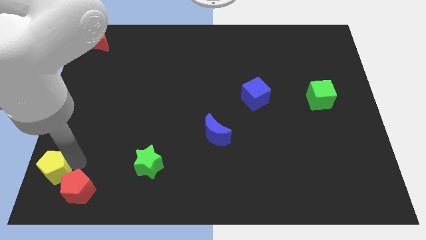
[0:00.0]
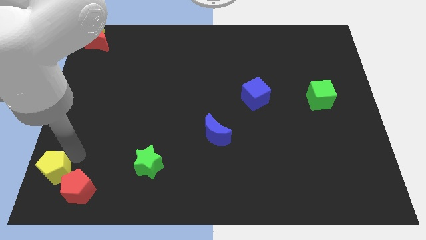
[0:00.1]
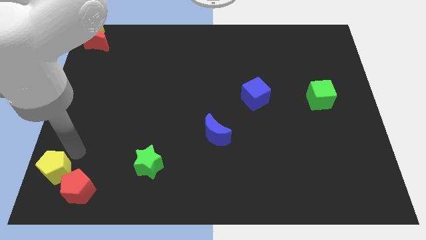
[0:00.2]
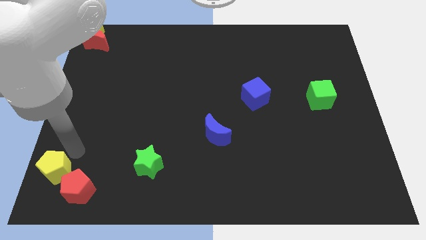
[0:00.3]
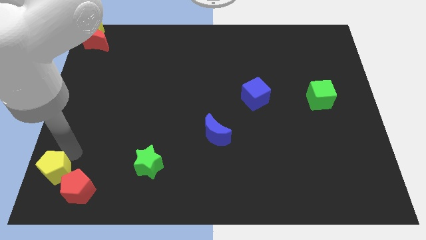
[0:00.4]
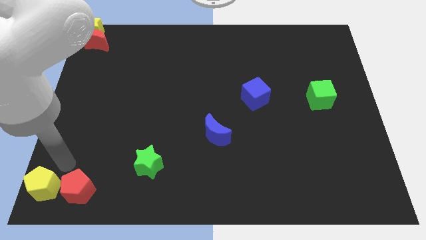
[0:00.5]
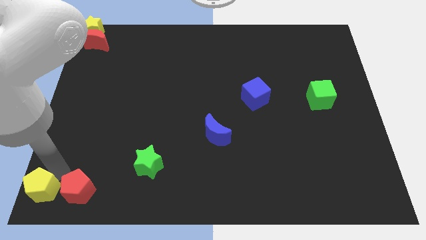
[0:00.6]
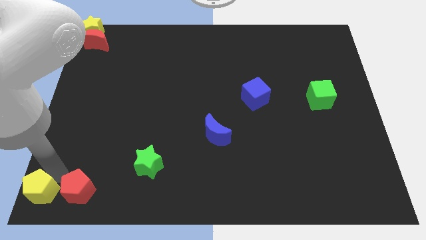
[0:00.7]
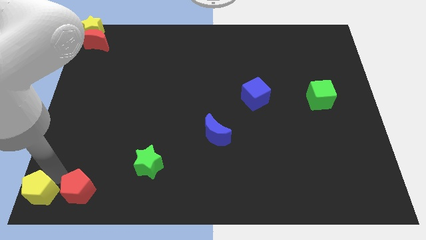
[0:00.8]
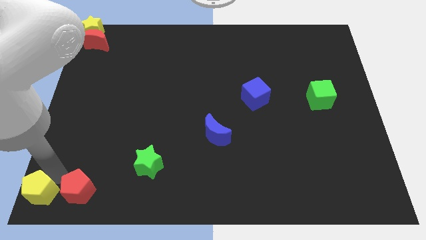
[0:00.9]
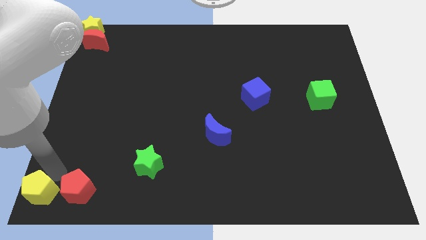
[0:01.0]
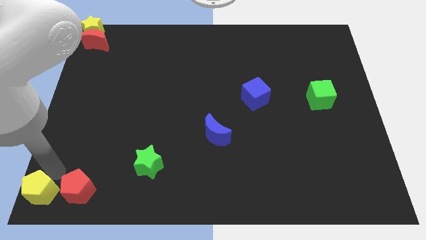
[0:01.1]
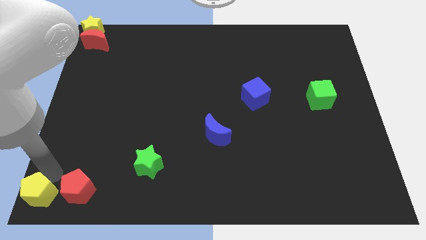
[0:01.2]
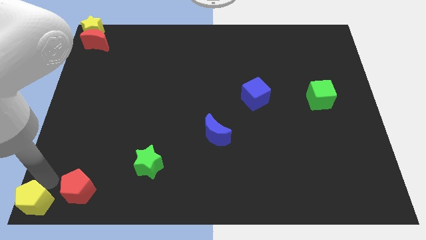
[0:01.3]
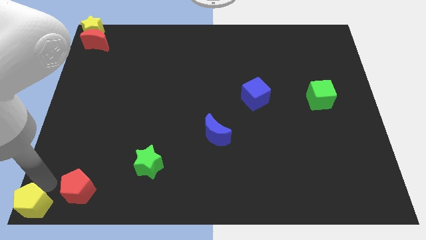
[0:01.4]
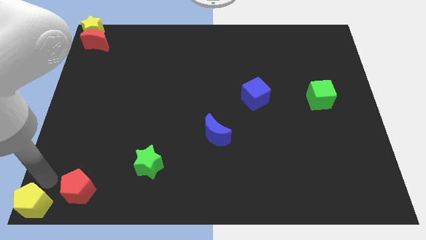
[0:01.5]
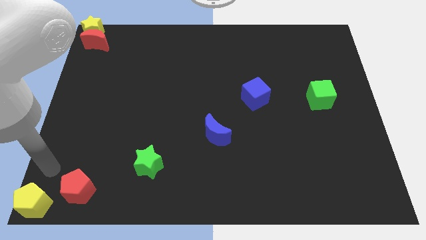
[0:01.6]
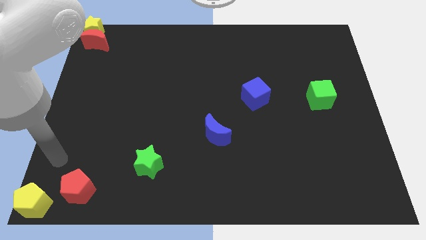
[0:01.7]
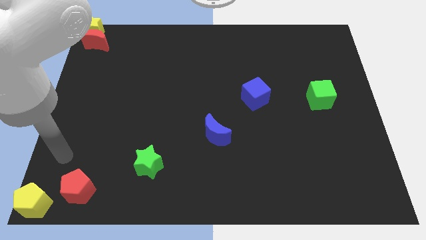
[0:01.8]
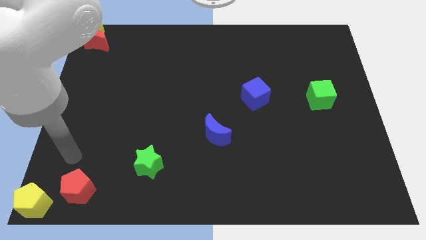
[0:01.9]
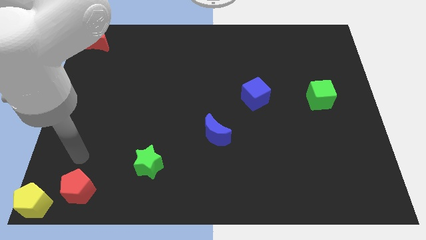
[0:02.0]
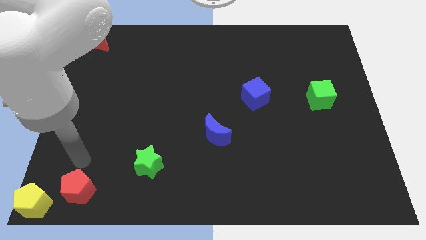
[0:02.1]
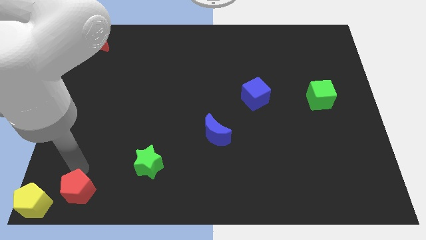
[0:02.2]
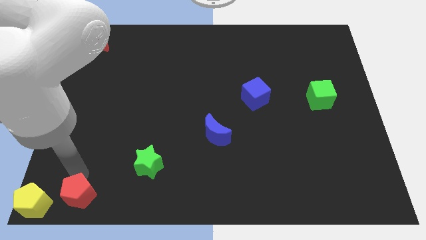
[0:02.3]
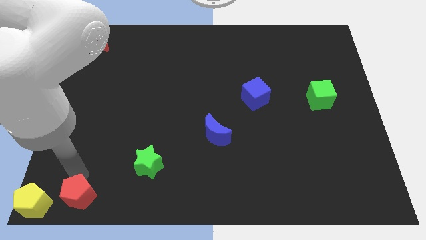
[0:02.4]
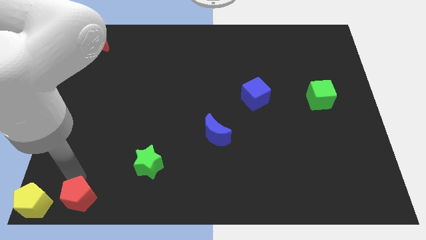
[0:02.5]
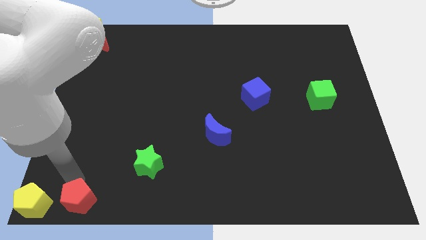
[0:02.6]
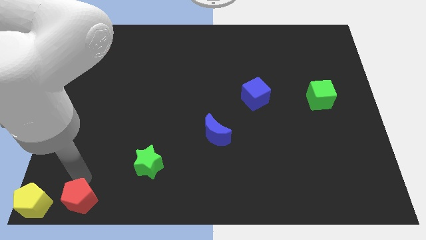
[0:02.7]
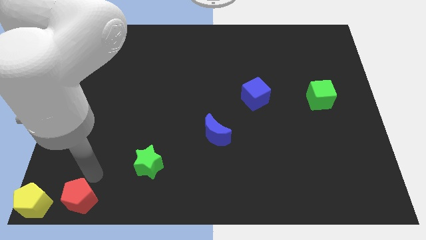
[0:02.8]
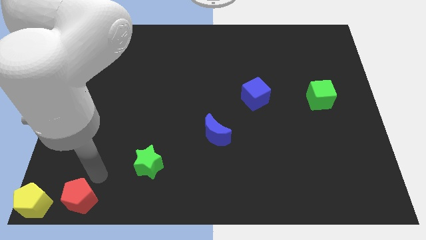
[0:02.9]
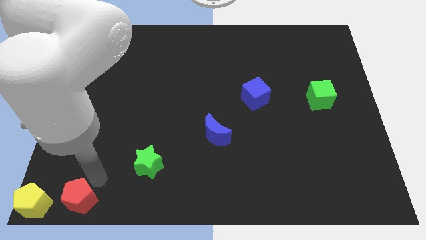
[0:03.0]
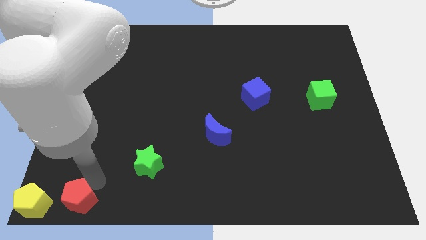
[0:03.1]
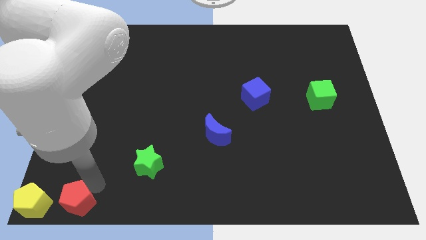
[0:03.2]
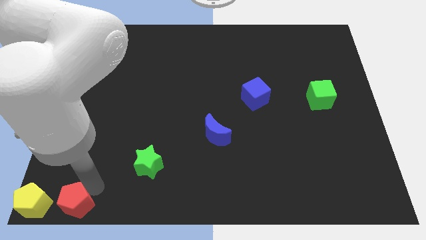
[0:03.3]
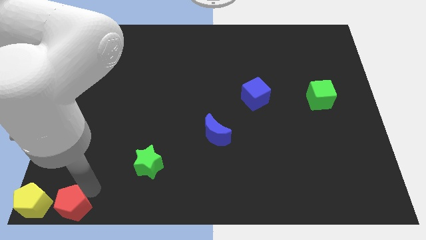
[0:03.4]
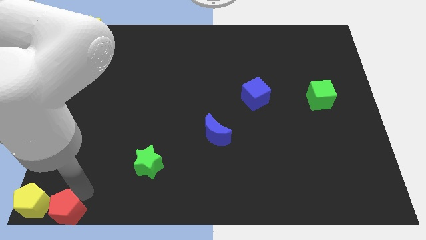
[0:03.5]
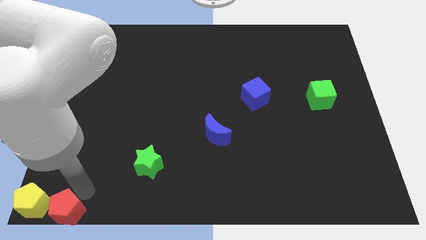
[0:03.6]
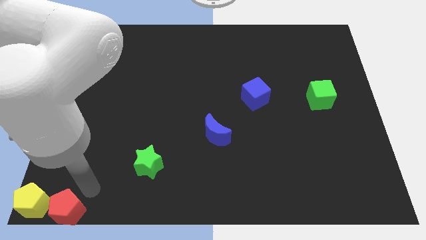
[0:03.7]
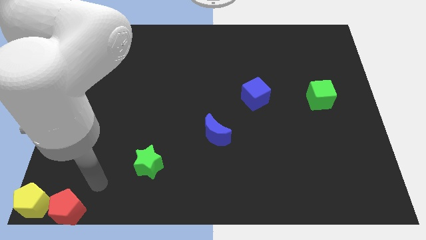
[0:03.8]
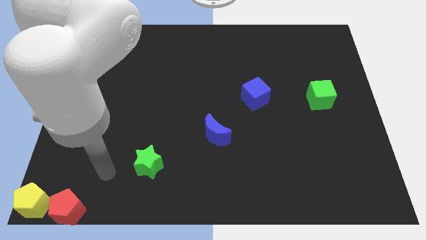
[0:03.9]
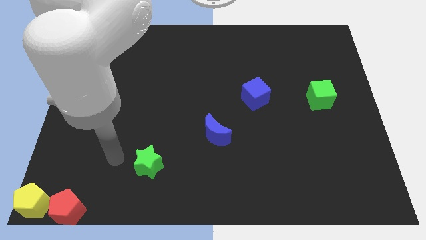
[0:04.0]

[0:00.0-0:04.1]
put both the pentagons at the bottom left corner of the board

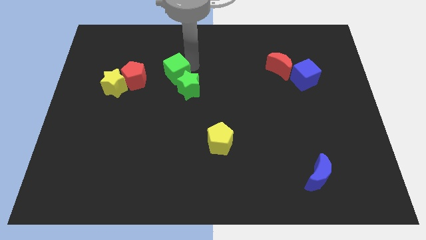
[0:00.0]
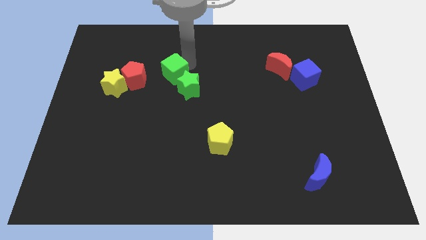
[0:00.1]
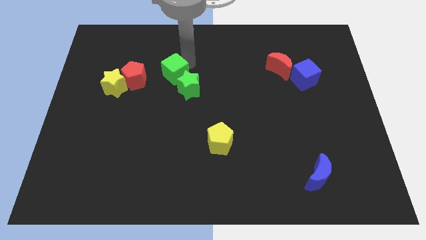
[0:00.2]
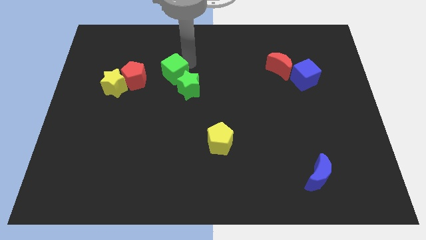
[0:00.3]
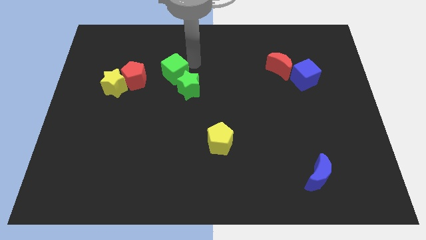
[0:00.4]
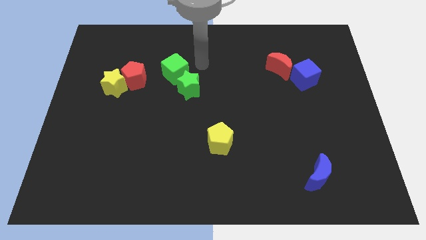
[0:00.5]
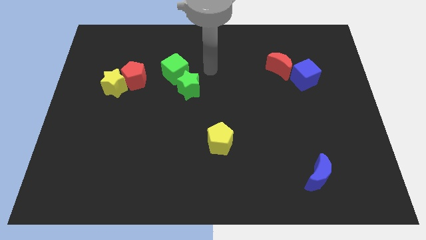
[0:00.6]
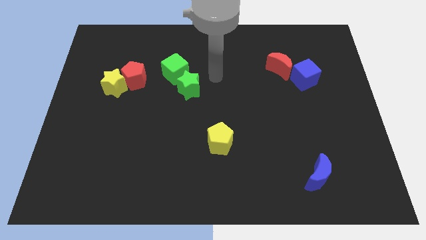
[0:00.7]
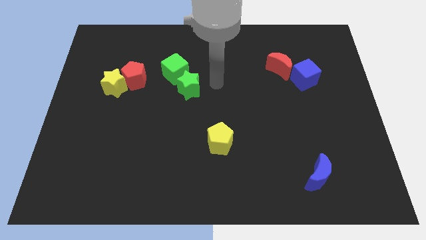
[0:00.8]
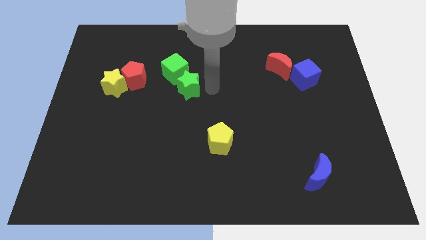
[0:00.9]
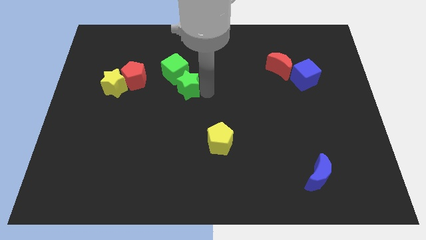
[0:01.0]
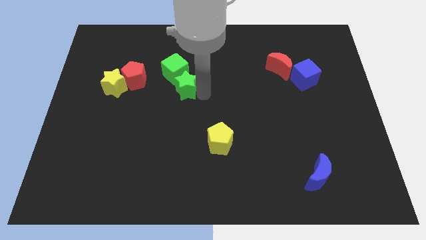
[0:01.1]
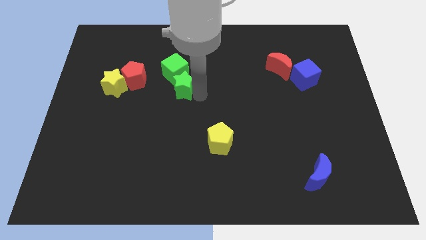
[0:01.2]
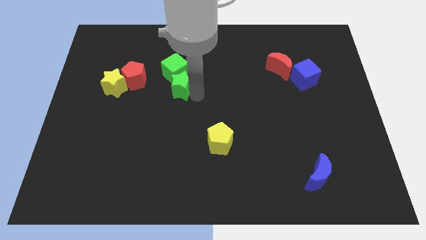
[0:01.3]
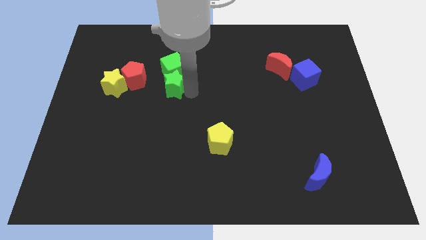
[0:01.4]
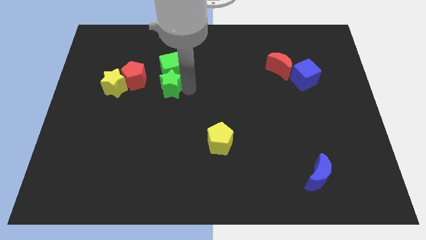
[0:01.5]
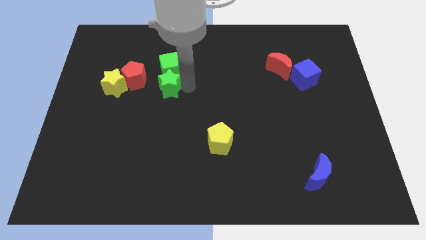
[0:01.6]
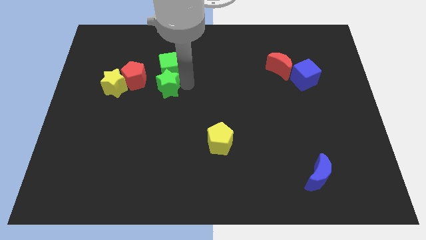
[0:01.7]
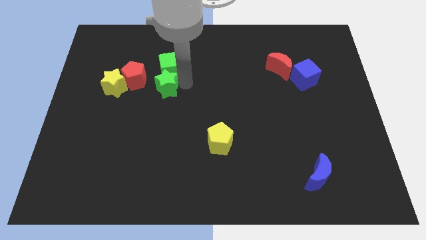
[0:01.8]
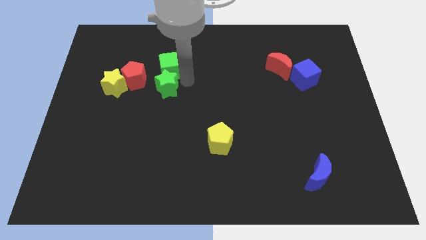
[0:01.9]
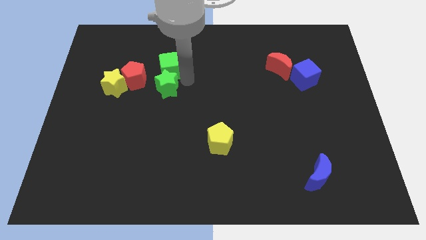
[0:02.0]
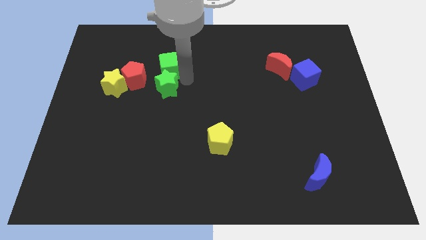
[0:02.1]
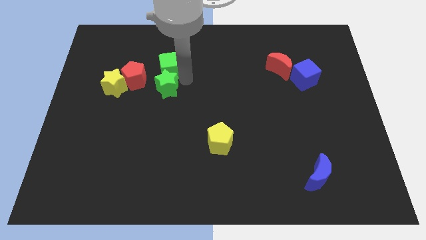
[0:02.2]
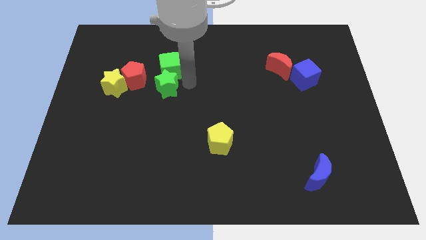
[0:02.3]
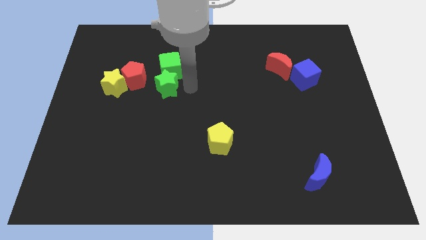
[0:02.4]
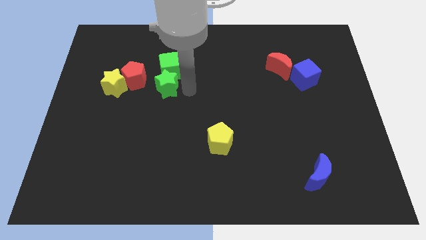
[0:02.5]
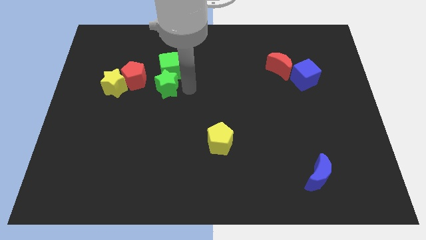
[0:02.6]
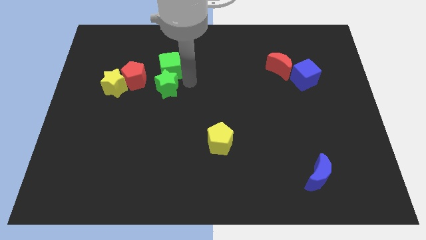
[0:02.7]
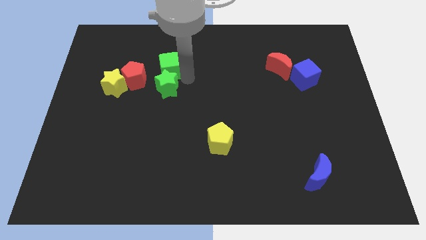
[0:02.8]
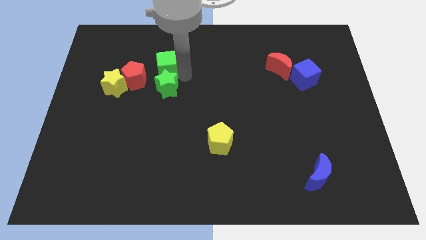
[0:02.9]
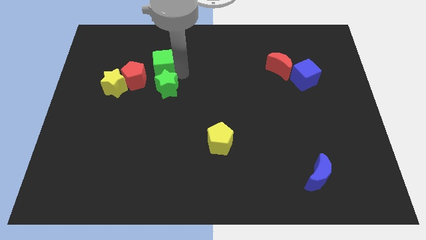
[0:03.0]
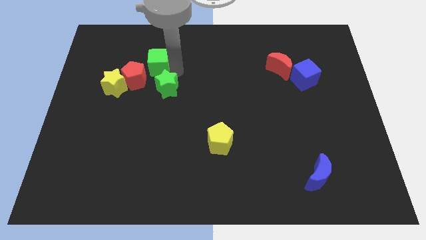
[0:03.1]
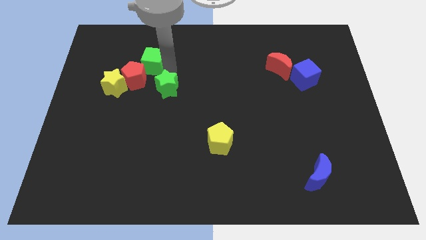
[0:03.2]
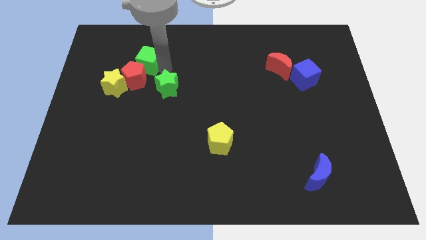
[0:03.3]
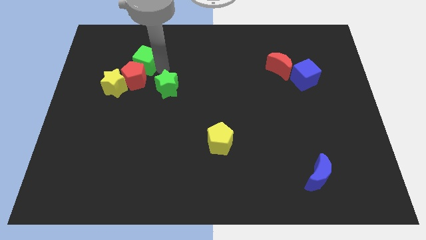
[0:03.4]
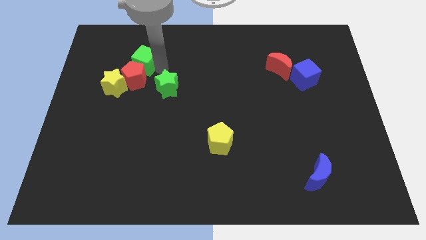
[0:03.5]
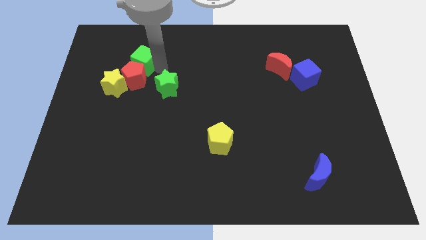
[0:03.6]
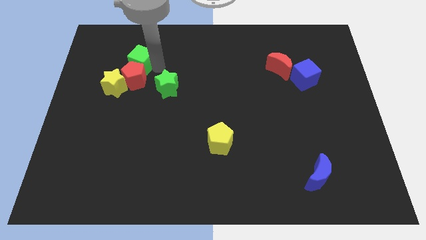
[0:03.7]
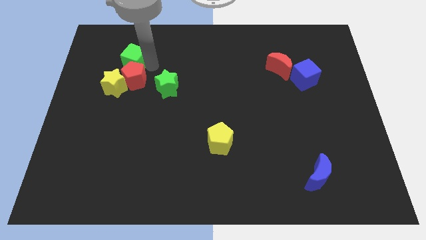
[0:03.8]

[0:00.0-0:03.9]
separate the green cube from the green star

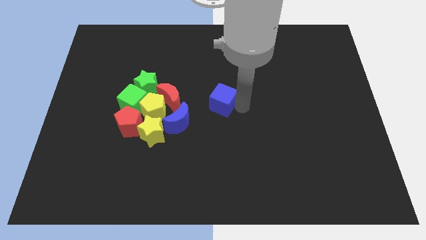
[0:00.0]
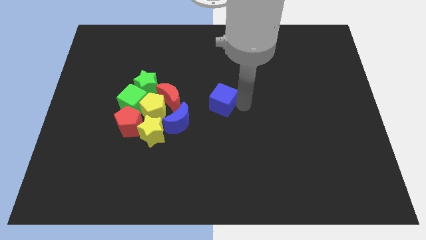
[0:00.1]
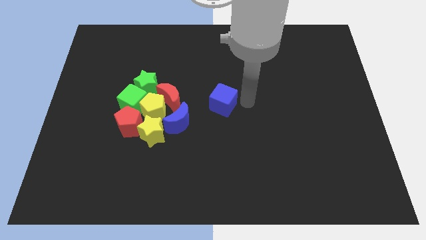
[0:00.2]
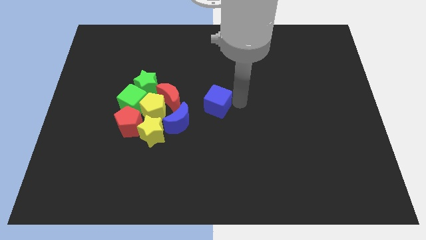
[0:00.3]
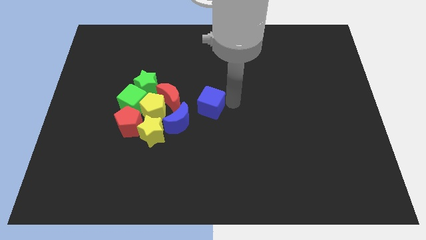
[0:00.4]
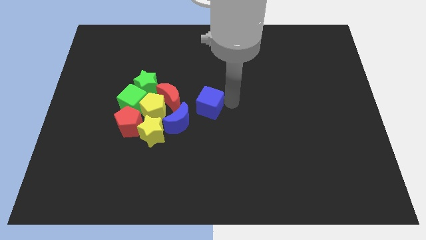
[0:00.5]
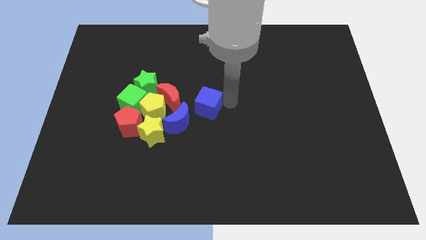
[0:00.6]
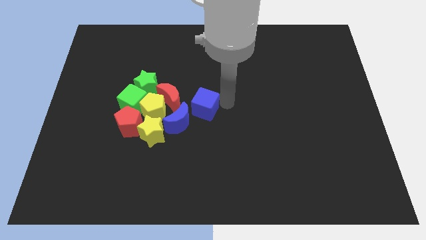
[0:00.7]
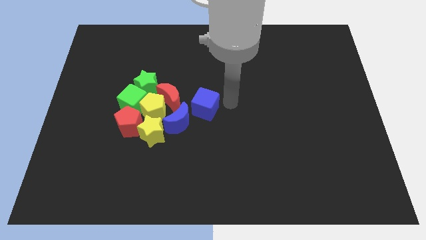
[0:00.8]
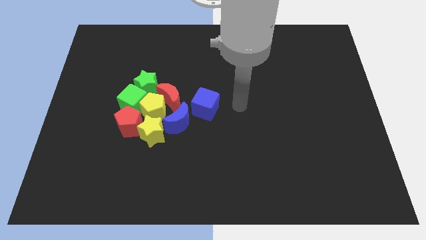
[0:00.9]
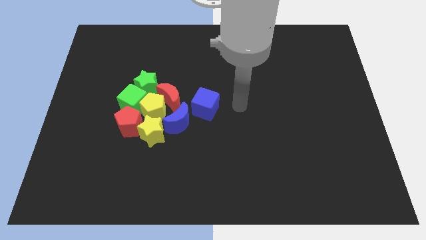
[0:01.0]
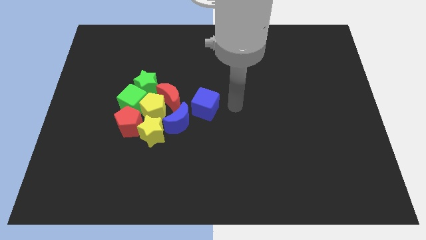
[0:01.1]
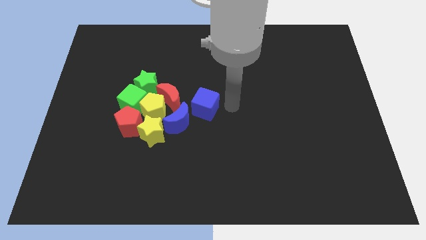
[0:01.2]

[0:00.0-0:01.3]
push the cube towards the group of blocks
